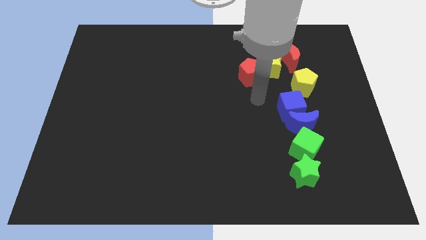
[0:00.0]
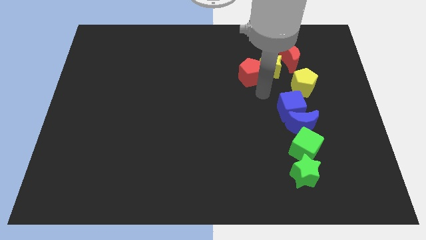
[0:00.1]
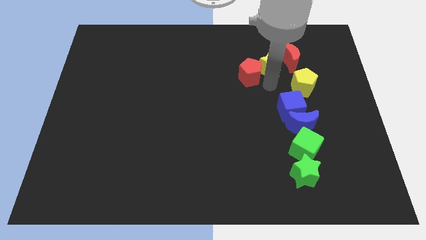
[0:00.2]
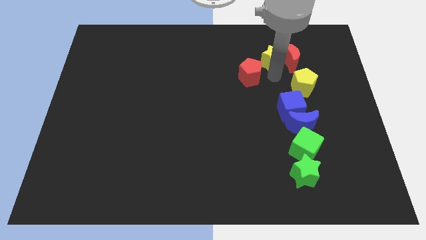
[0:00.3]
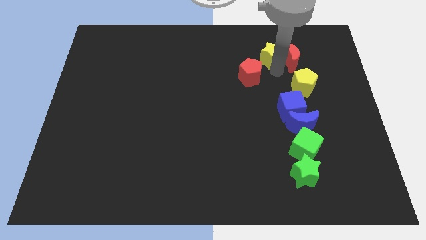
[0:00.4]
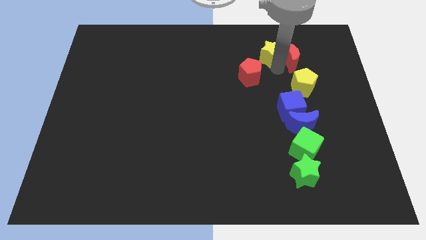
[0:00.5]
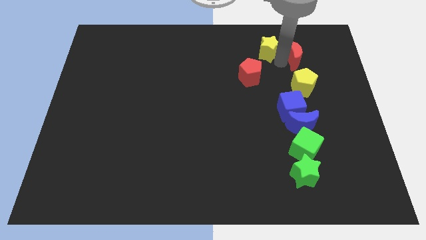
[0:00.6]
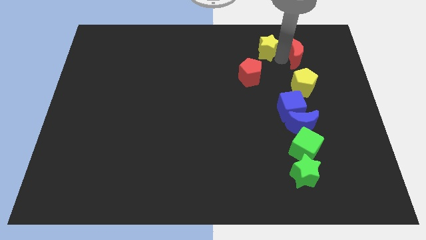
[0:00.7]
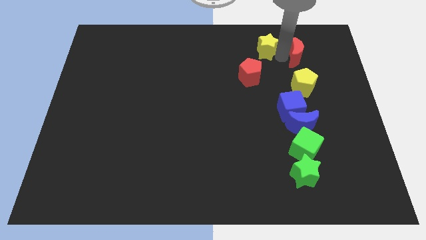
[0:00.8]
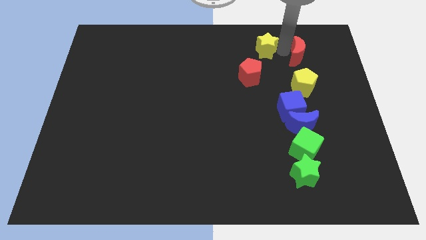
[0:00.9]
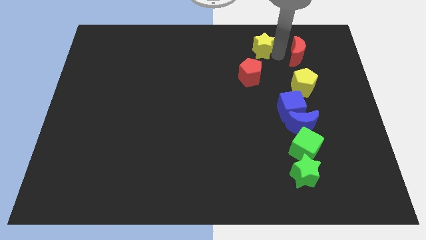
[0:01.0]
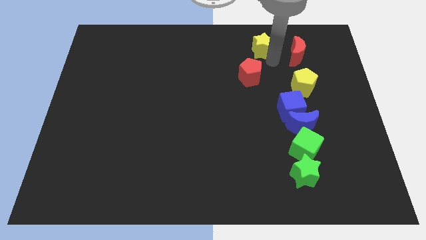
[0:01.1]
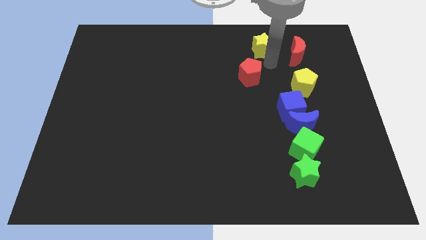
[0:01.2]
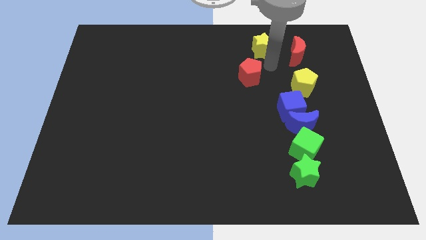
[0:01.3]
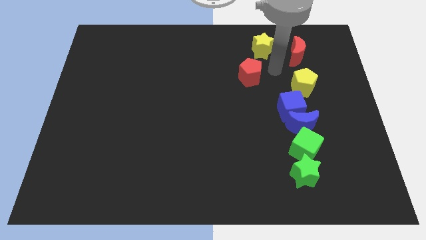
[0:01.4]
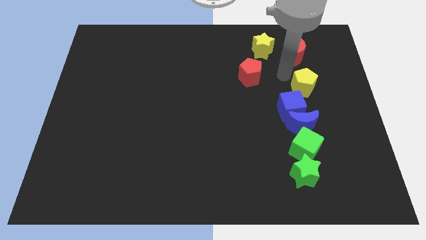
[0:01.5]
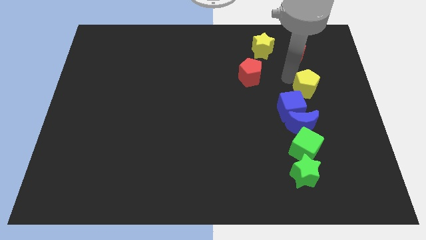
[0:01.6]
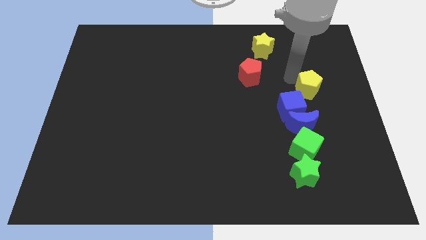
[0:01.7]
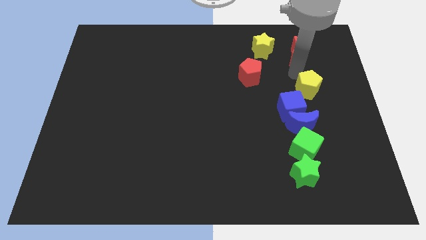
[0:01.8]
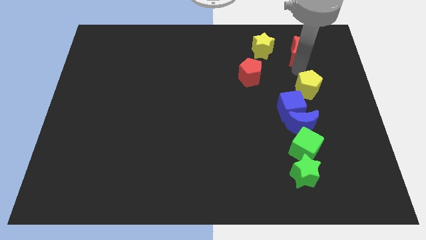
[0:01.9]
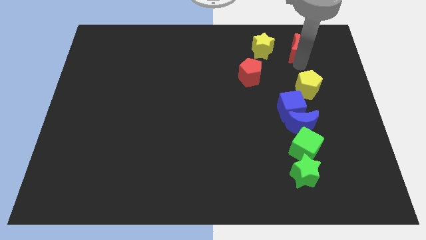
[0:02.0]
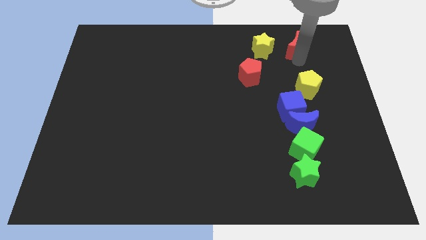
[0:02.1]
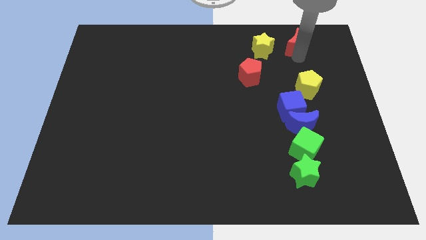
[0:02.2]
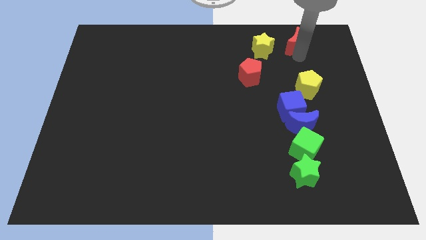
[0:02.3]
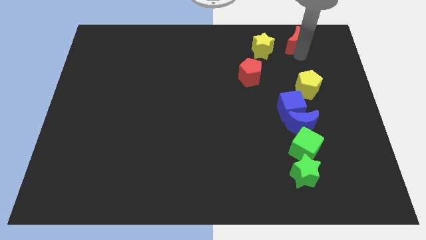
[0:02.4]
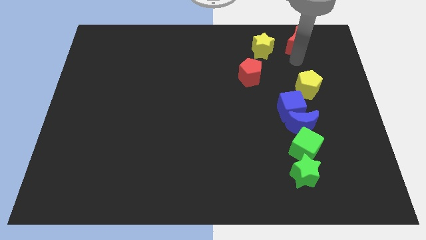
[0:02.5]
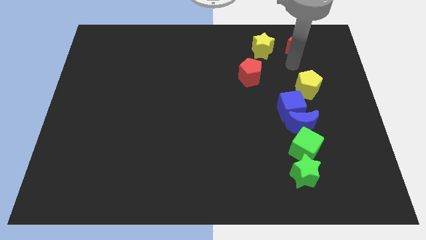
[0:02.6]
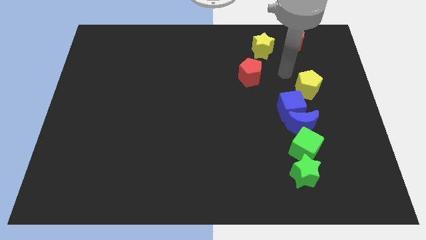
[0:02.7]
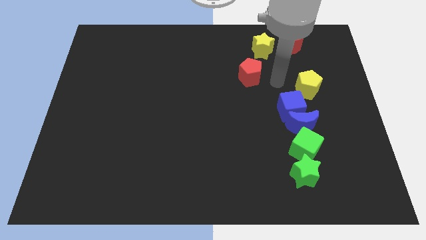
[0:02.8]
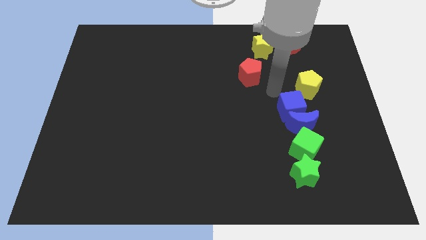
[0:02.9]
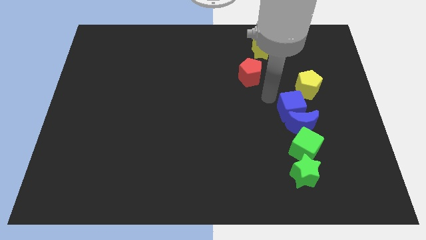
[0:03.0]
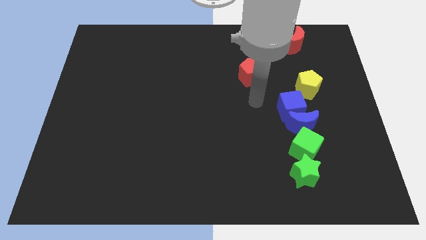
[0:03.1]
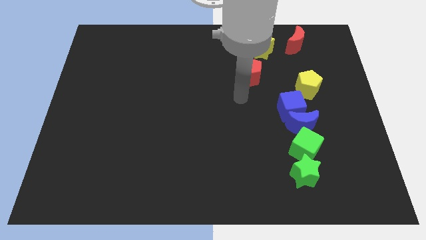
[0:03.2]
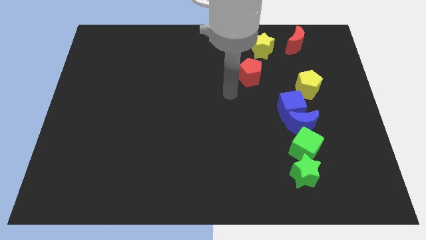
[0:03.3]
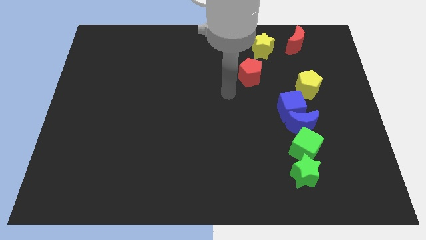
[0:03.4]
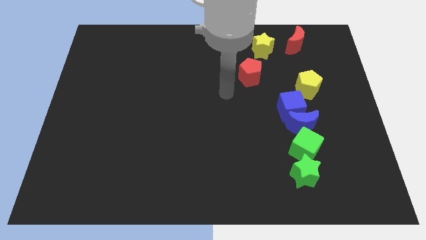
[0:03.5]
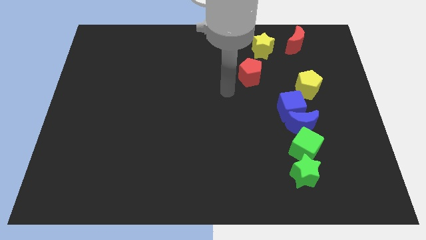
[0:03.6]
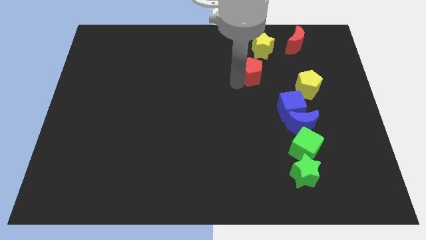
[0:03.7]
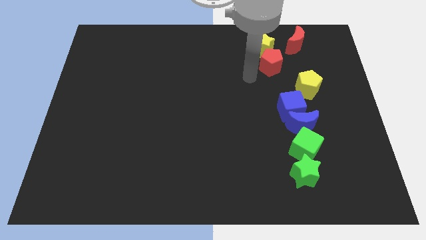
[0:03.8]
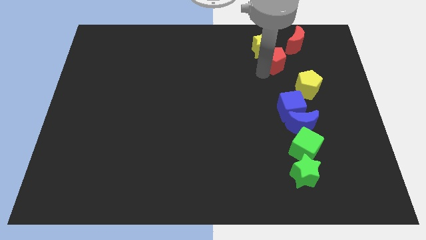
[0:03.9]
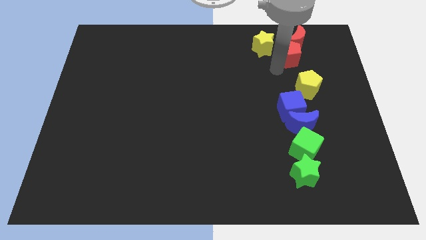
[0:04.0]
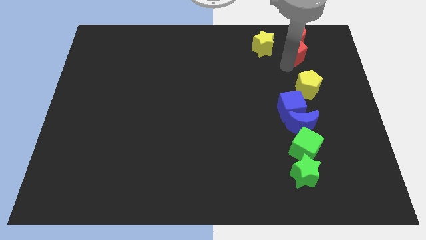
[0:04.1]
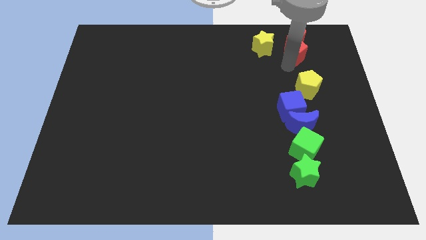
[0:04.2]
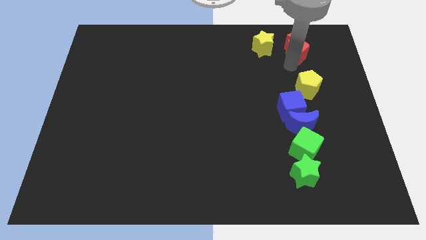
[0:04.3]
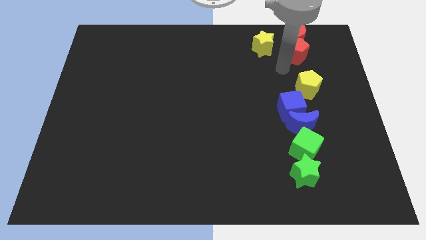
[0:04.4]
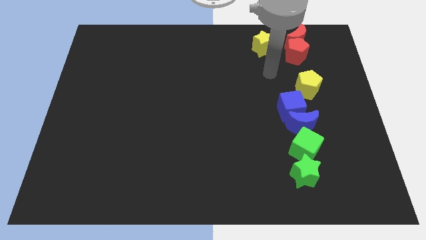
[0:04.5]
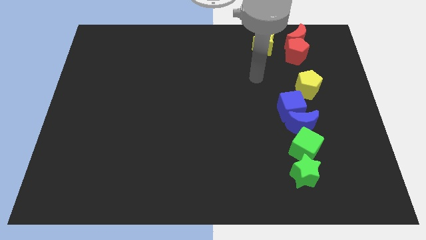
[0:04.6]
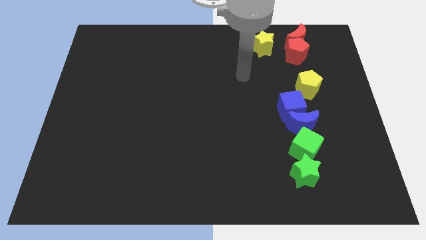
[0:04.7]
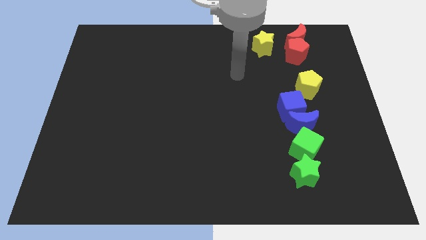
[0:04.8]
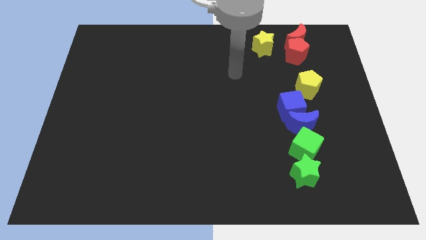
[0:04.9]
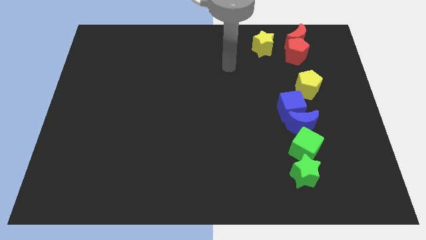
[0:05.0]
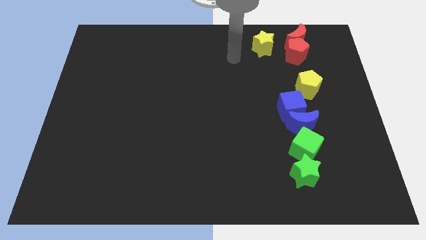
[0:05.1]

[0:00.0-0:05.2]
move the red pentagon into the bottom side of the red crescent

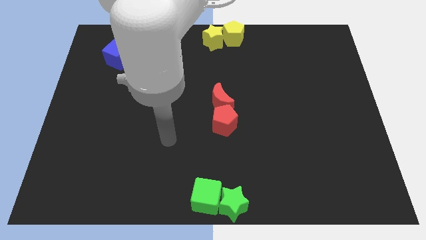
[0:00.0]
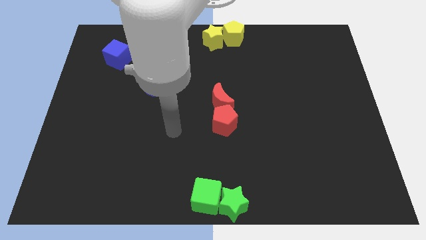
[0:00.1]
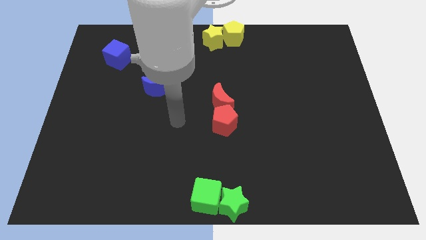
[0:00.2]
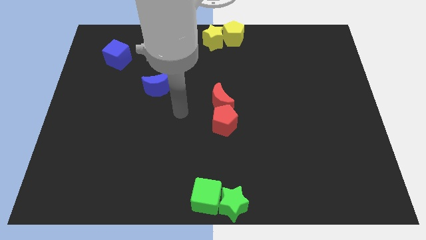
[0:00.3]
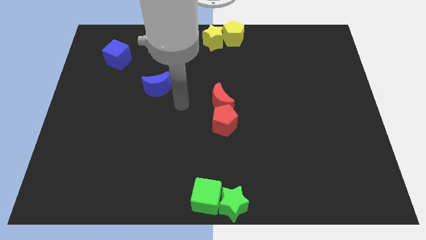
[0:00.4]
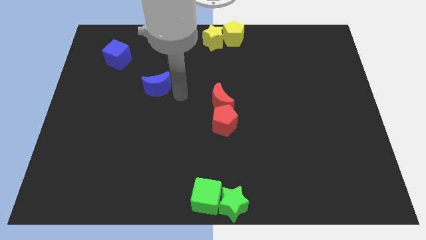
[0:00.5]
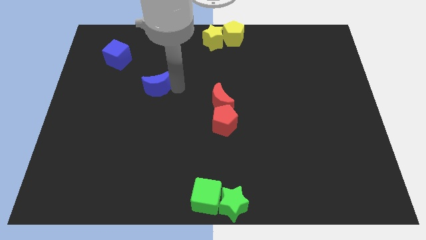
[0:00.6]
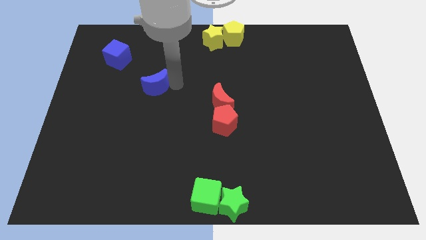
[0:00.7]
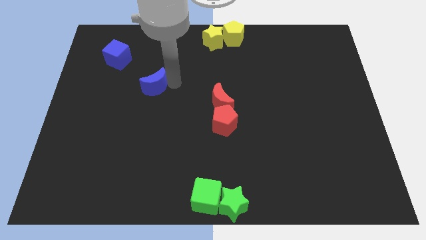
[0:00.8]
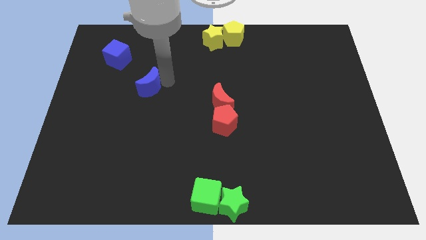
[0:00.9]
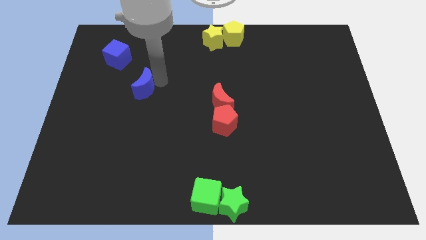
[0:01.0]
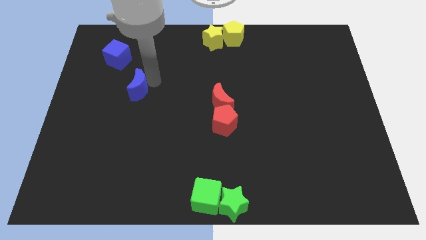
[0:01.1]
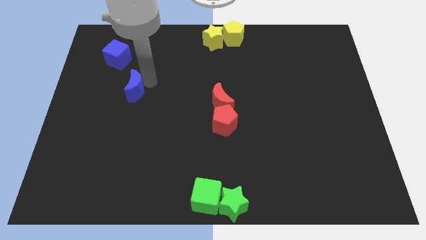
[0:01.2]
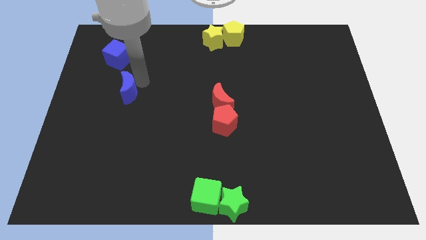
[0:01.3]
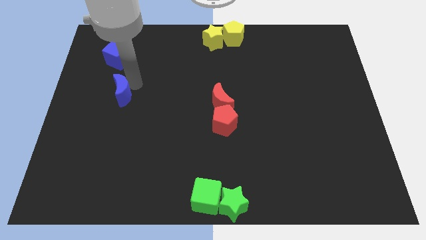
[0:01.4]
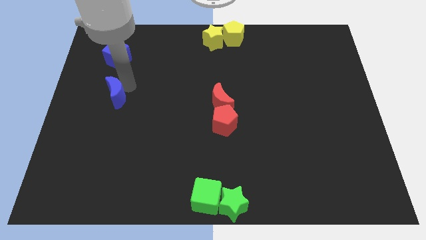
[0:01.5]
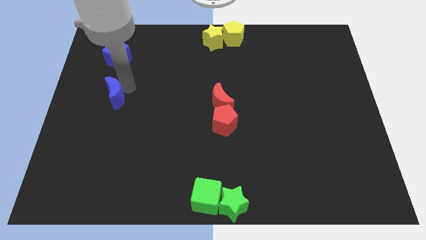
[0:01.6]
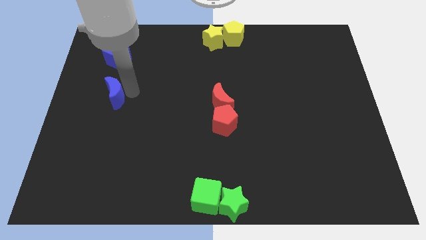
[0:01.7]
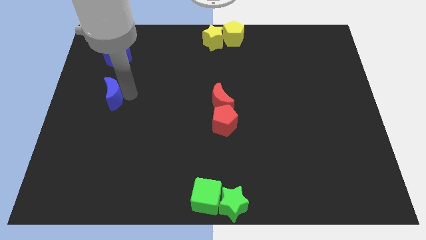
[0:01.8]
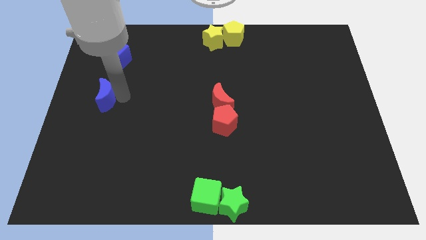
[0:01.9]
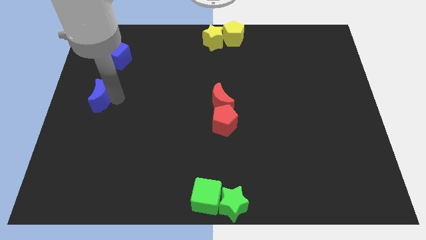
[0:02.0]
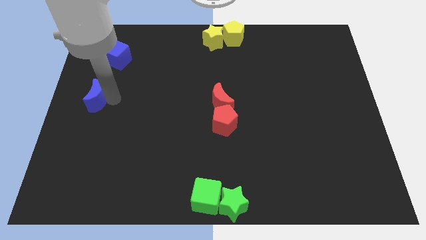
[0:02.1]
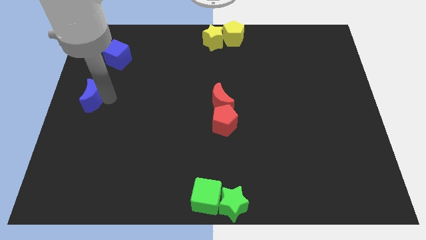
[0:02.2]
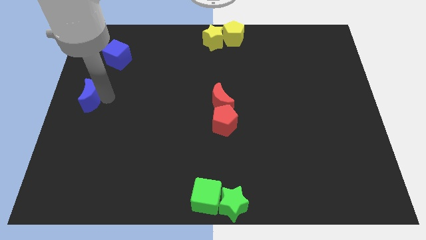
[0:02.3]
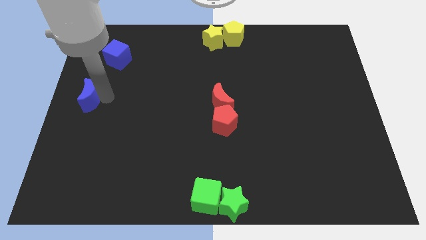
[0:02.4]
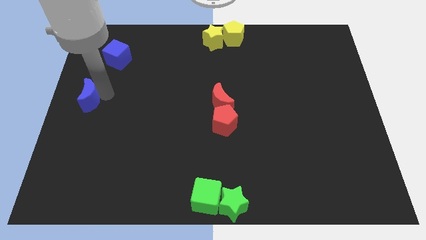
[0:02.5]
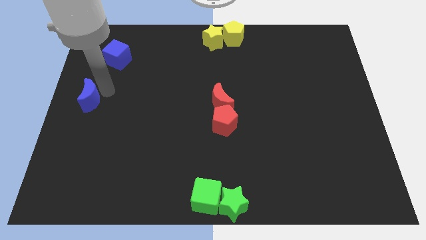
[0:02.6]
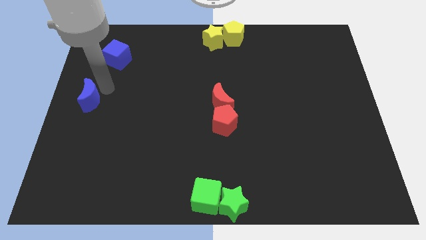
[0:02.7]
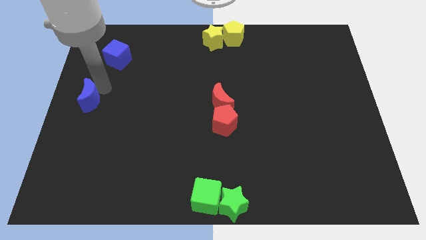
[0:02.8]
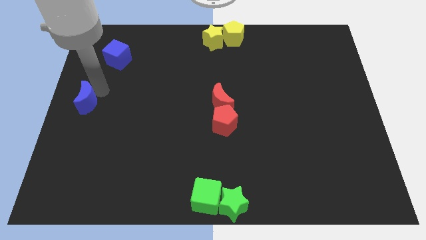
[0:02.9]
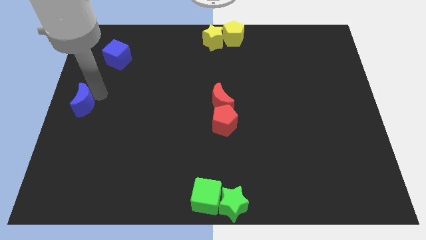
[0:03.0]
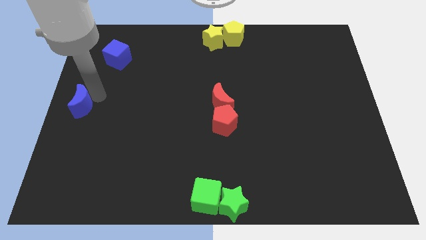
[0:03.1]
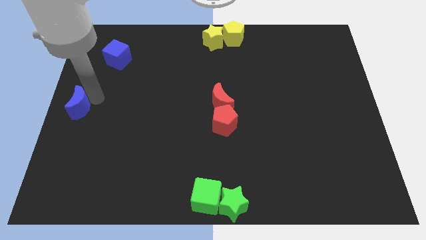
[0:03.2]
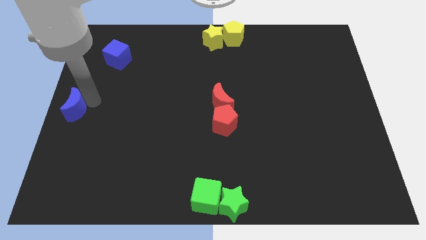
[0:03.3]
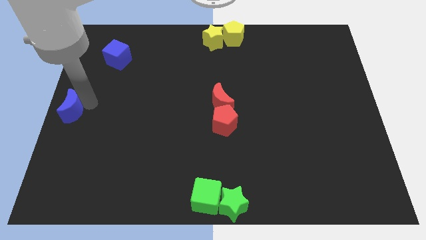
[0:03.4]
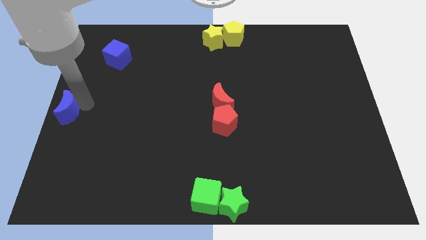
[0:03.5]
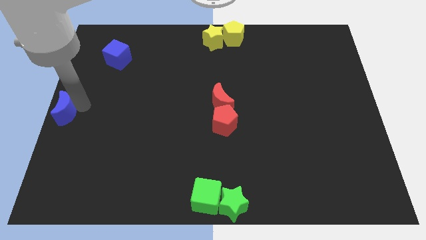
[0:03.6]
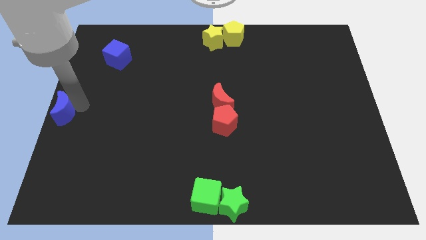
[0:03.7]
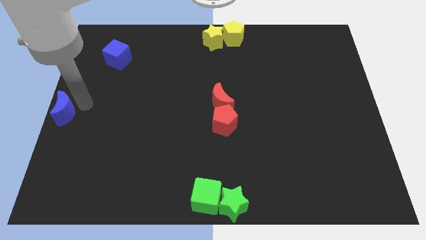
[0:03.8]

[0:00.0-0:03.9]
move blue crescent to the left center of the board

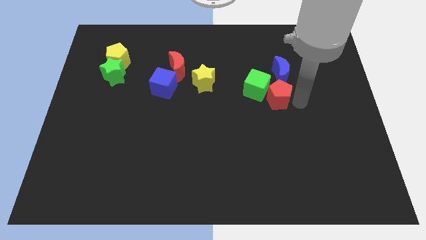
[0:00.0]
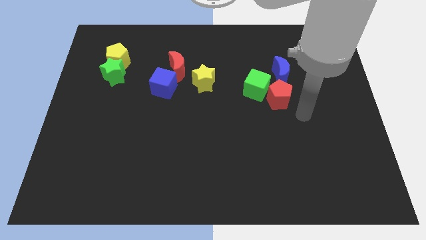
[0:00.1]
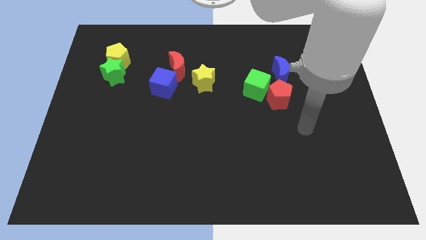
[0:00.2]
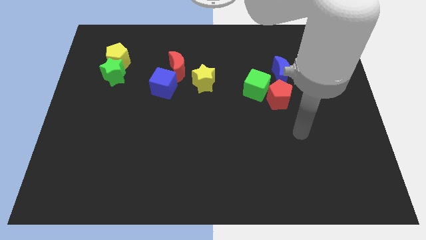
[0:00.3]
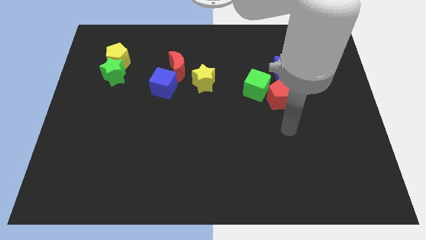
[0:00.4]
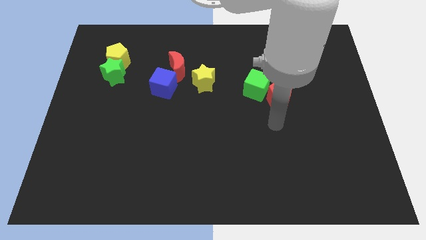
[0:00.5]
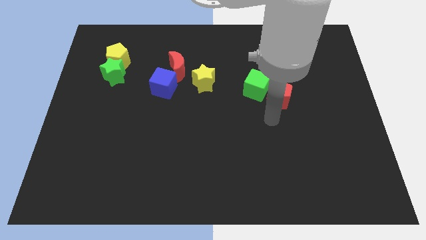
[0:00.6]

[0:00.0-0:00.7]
move your arm below the red block
